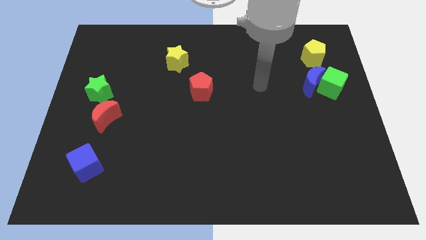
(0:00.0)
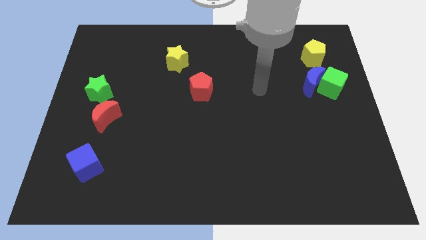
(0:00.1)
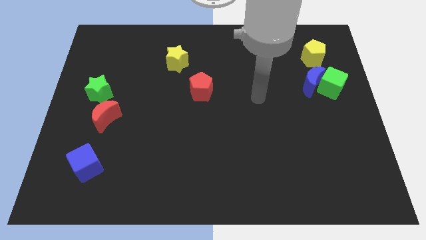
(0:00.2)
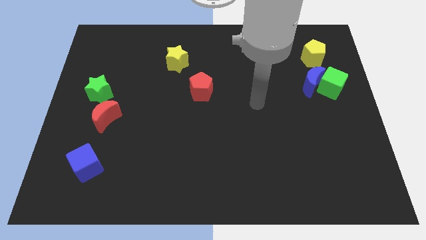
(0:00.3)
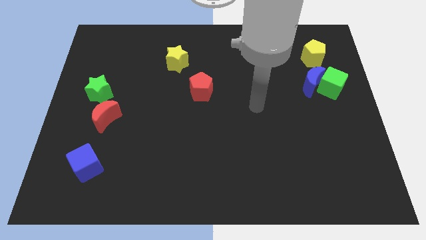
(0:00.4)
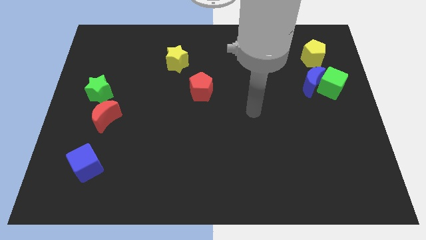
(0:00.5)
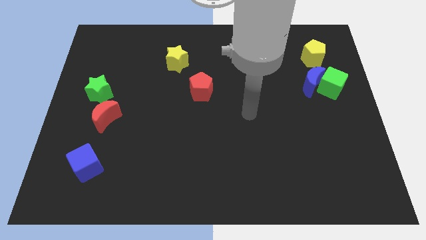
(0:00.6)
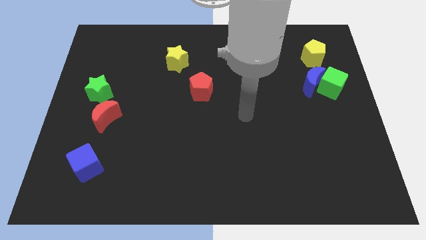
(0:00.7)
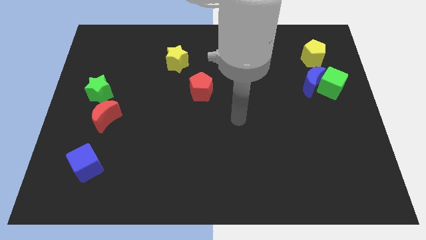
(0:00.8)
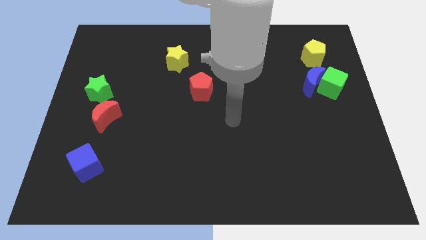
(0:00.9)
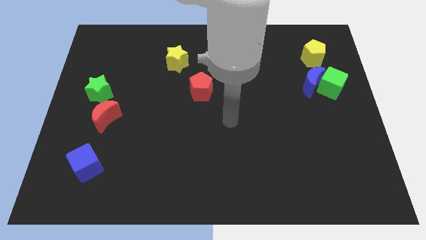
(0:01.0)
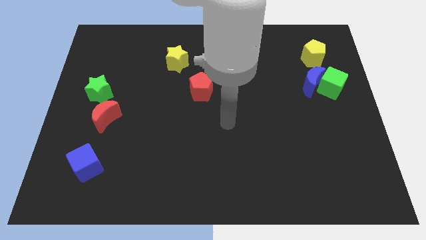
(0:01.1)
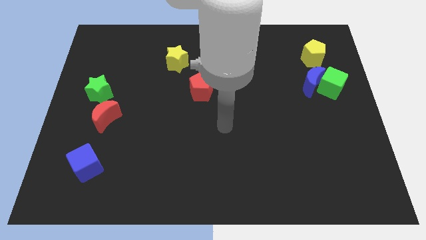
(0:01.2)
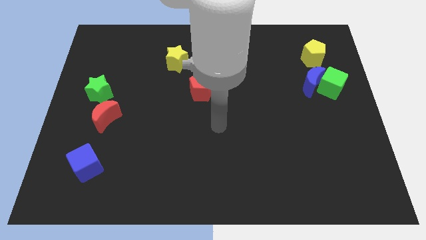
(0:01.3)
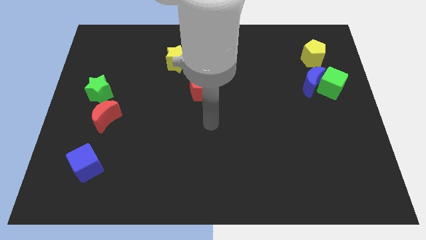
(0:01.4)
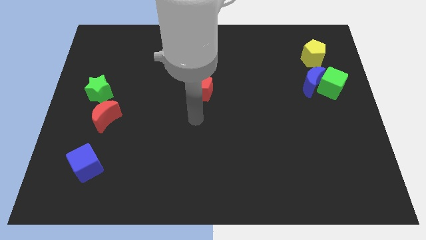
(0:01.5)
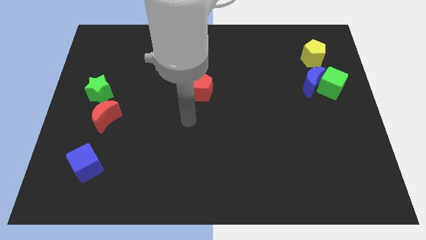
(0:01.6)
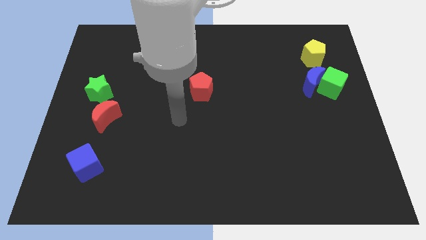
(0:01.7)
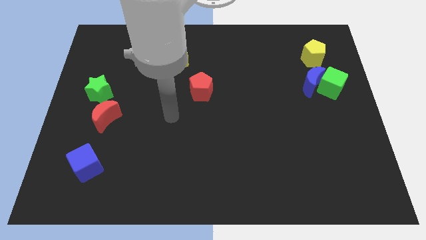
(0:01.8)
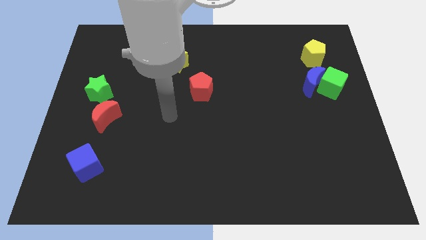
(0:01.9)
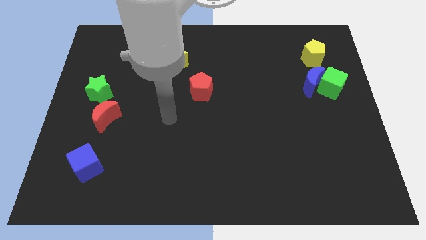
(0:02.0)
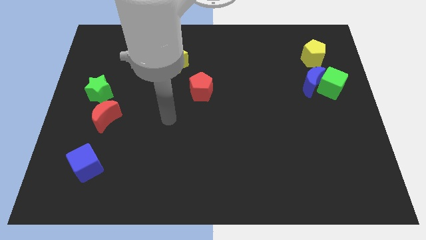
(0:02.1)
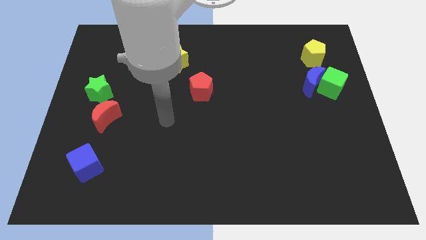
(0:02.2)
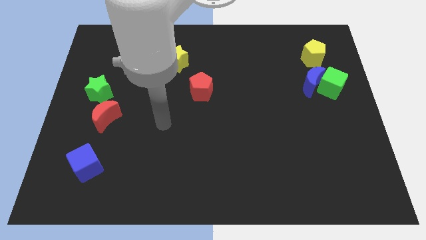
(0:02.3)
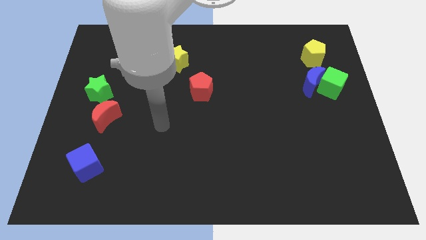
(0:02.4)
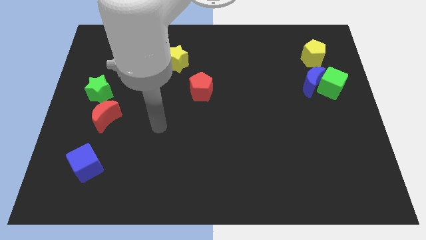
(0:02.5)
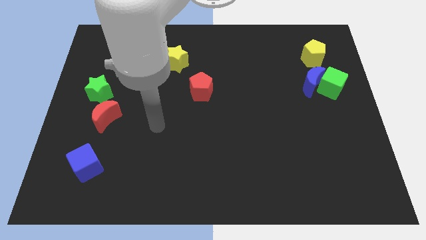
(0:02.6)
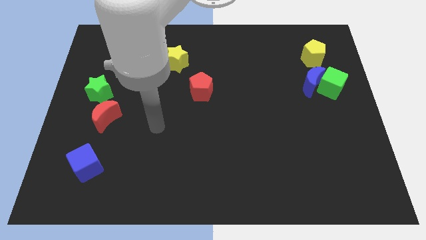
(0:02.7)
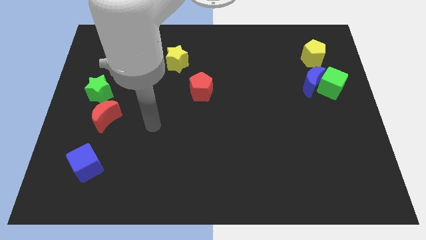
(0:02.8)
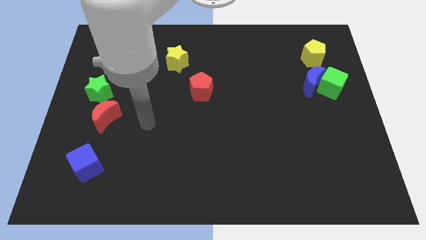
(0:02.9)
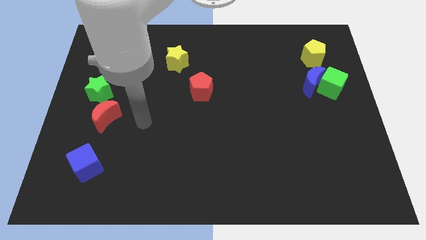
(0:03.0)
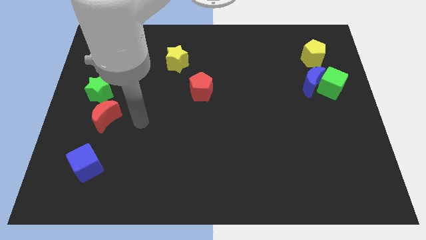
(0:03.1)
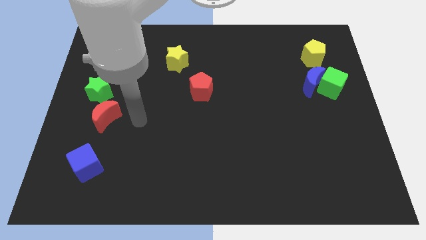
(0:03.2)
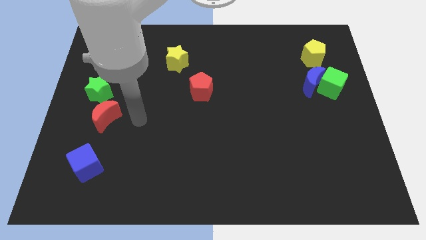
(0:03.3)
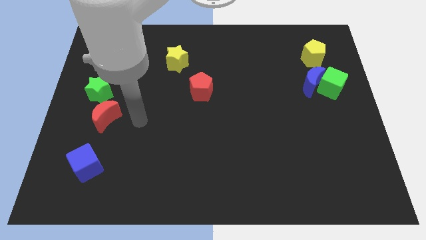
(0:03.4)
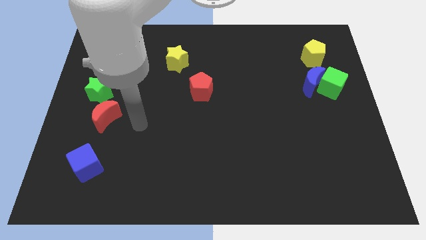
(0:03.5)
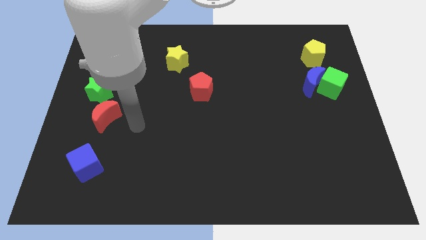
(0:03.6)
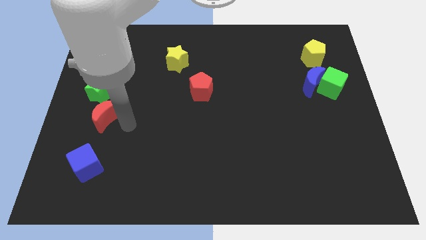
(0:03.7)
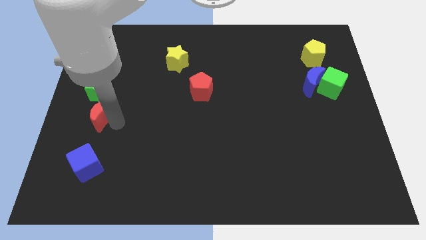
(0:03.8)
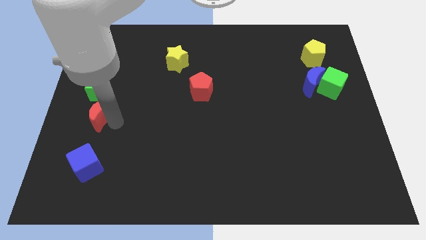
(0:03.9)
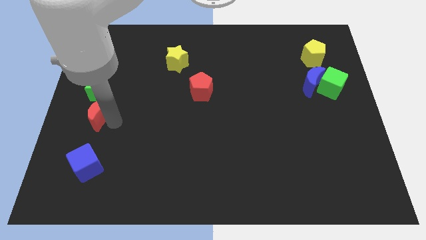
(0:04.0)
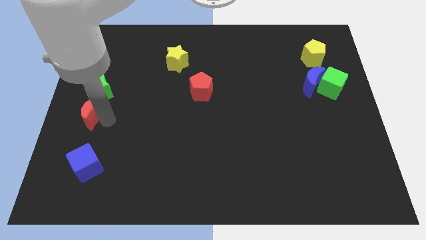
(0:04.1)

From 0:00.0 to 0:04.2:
place the red moon below the green star

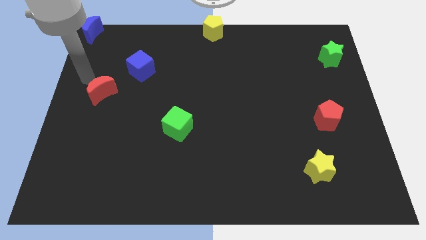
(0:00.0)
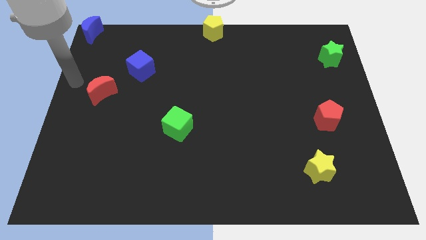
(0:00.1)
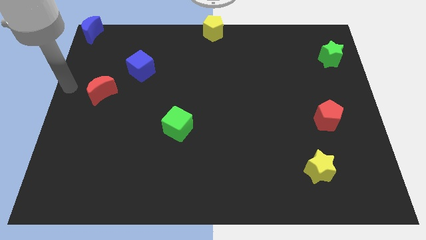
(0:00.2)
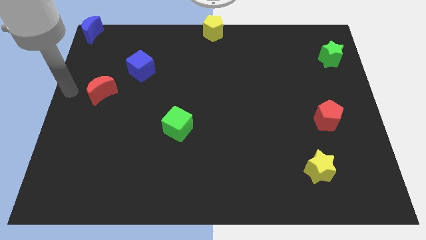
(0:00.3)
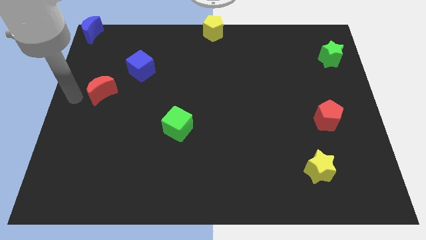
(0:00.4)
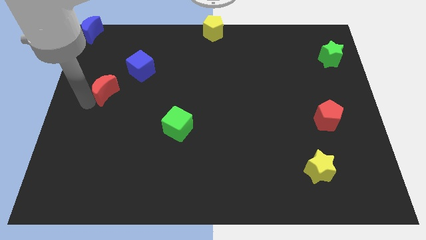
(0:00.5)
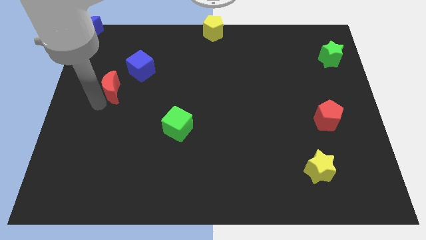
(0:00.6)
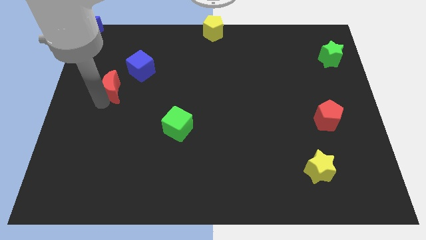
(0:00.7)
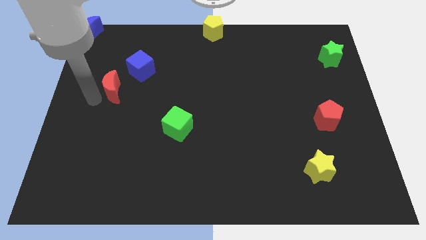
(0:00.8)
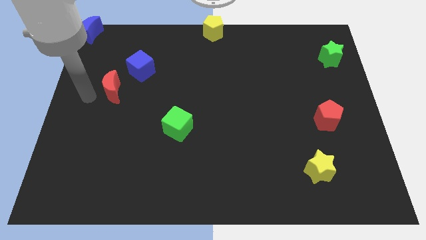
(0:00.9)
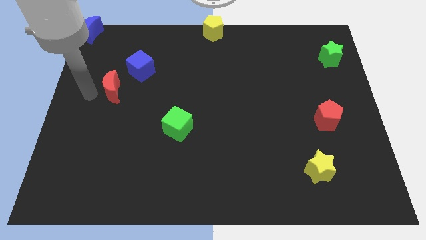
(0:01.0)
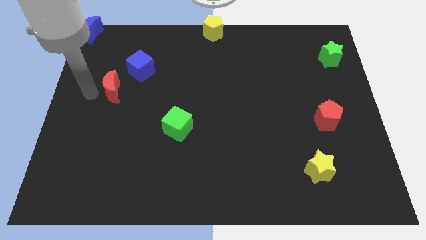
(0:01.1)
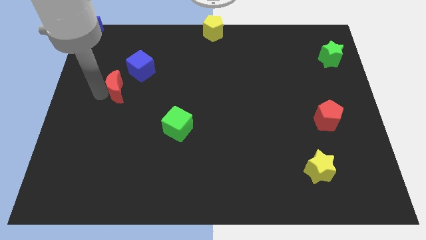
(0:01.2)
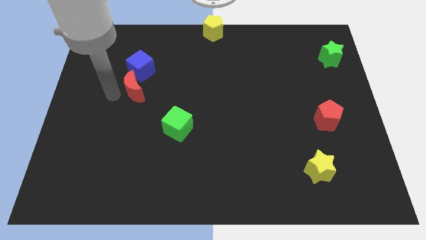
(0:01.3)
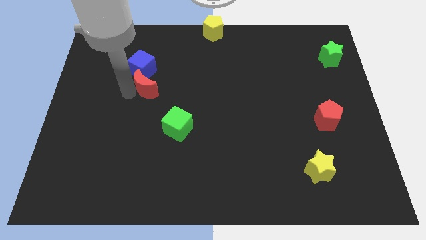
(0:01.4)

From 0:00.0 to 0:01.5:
push the red moon into the bottom side of the blue cube

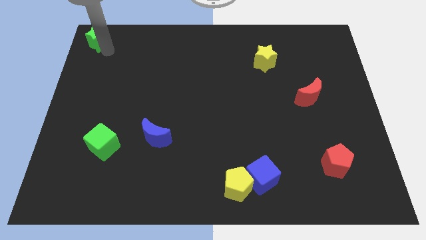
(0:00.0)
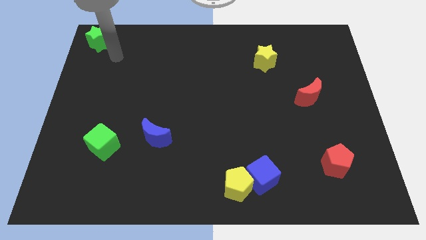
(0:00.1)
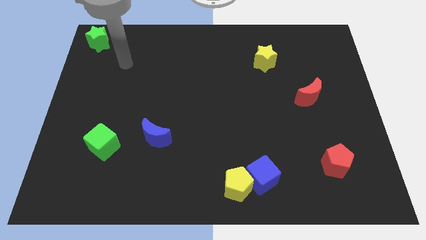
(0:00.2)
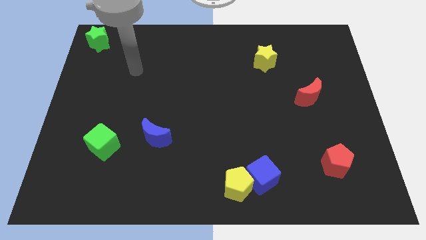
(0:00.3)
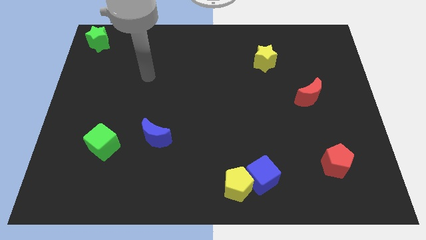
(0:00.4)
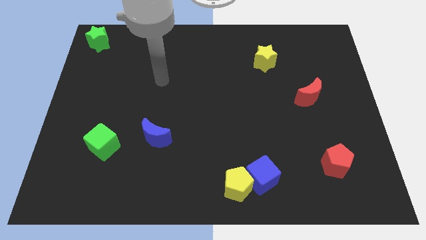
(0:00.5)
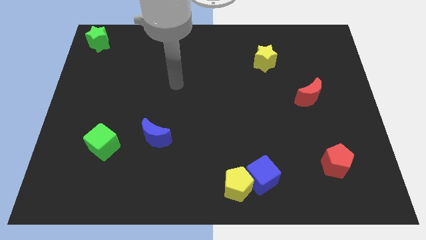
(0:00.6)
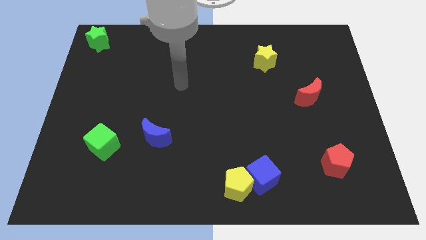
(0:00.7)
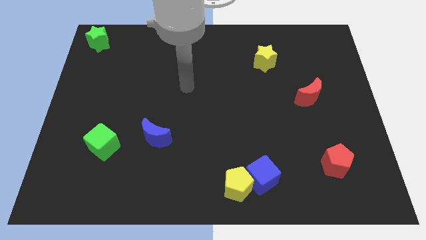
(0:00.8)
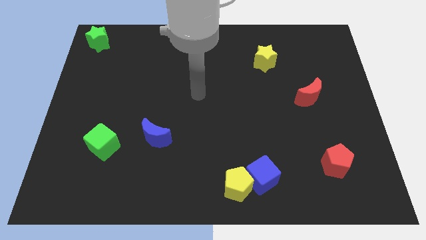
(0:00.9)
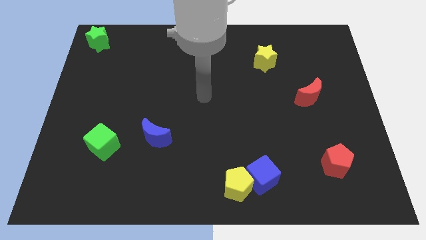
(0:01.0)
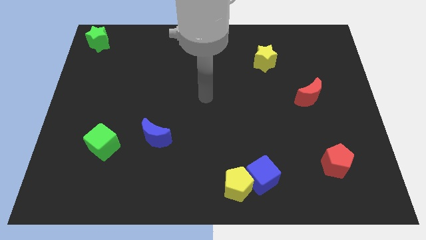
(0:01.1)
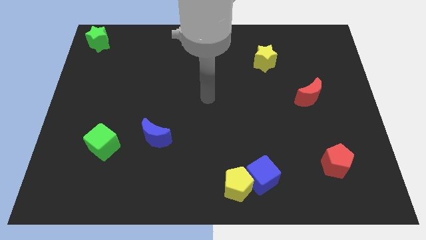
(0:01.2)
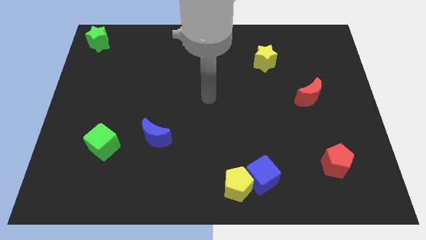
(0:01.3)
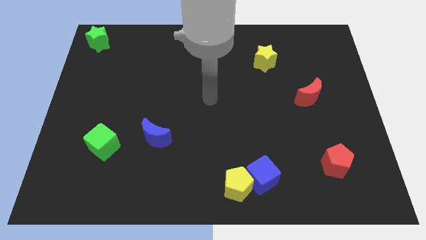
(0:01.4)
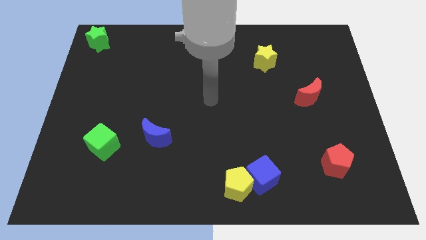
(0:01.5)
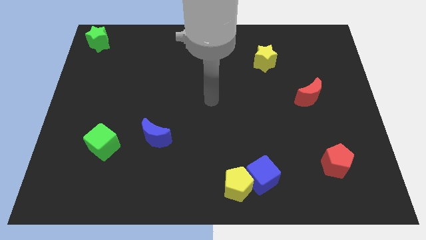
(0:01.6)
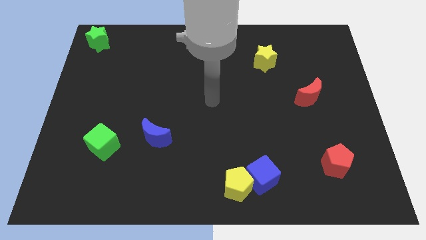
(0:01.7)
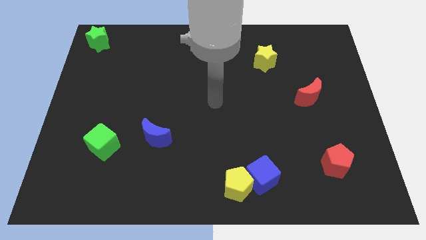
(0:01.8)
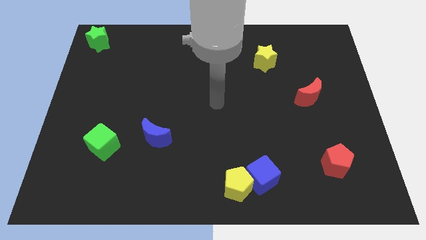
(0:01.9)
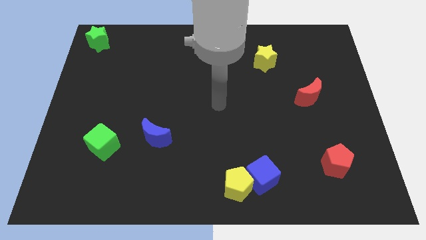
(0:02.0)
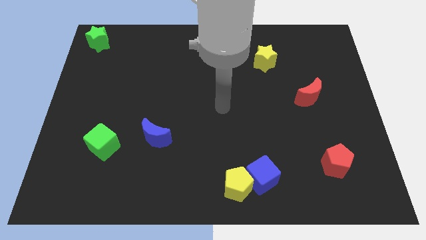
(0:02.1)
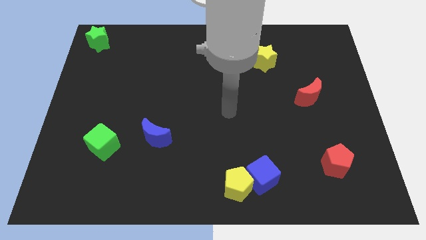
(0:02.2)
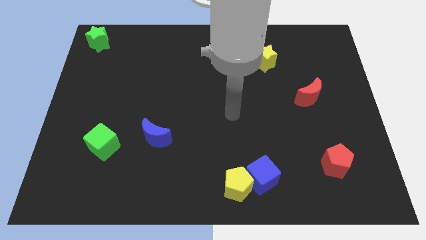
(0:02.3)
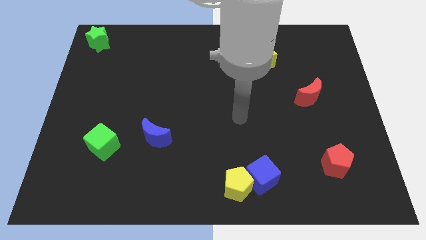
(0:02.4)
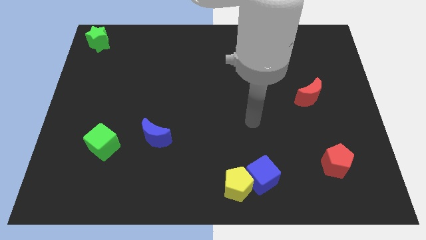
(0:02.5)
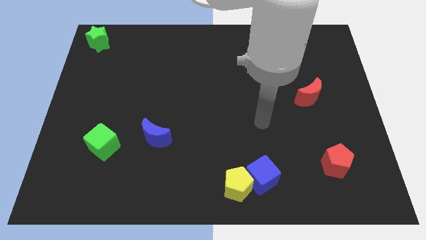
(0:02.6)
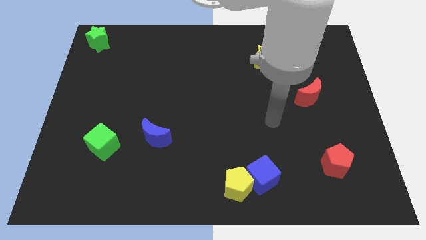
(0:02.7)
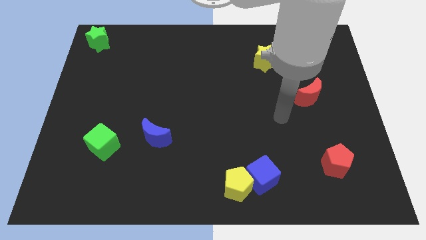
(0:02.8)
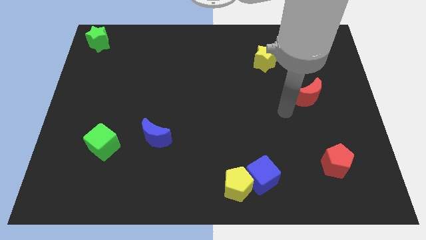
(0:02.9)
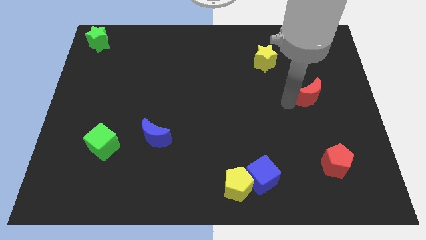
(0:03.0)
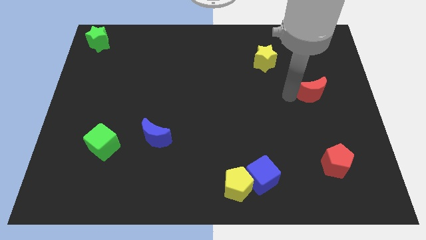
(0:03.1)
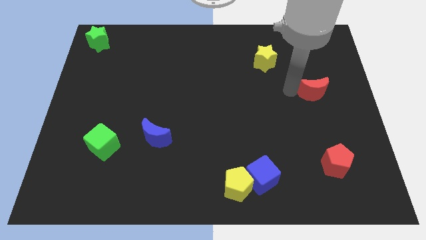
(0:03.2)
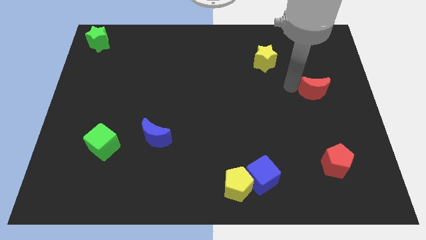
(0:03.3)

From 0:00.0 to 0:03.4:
move your arm away form the green star
